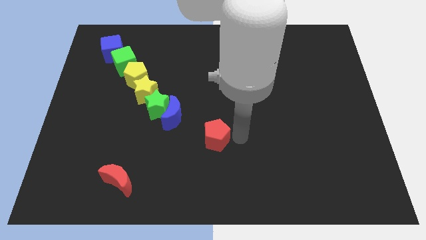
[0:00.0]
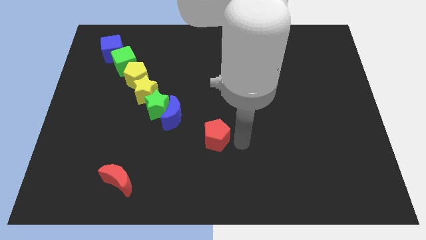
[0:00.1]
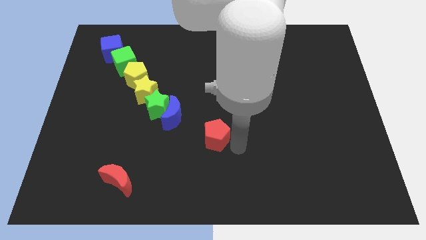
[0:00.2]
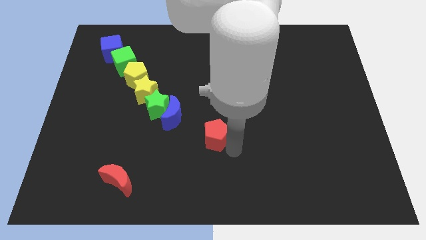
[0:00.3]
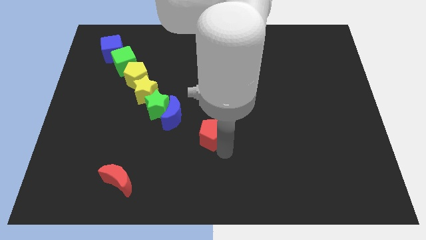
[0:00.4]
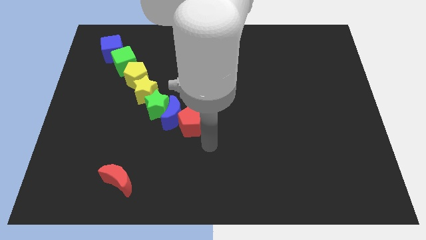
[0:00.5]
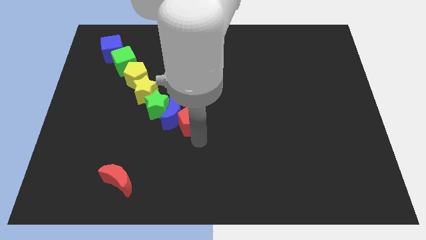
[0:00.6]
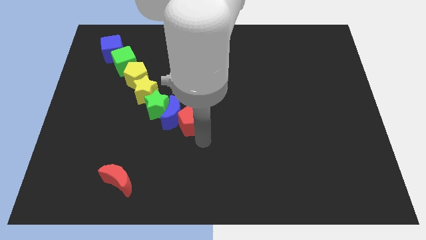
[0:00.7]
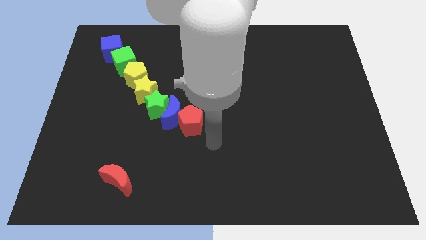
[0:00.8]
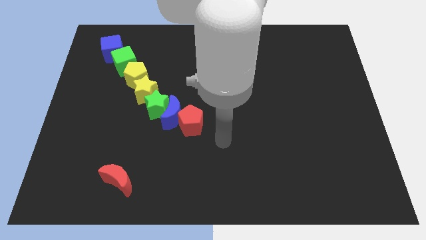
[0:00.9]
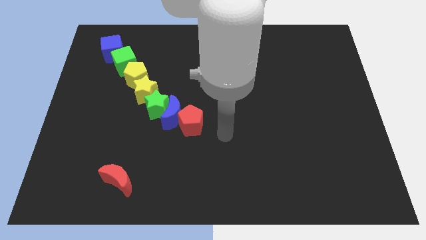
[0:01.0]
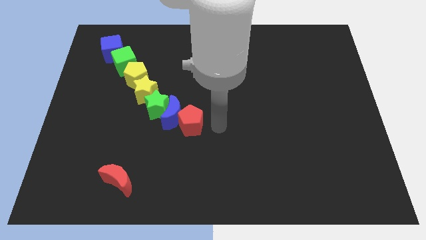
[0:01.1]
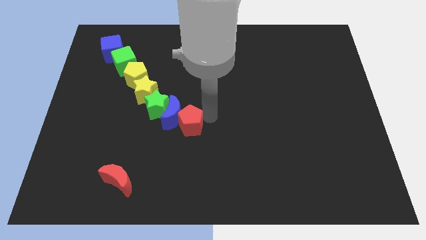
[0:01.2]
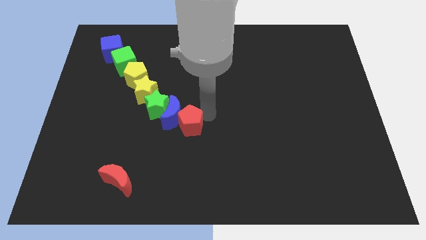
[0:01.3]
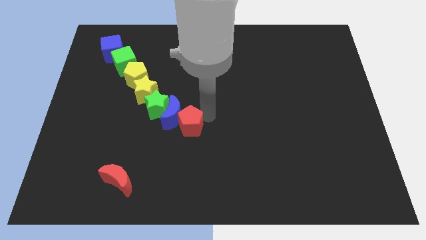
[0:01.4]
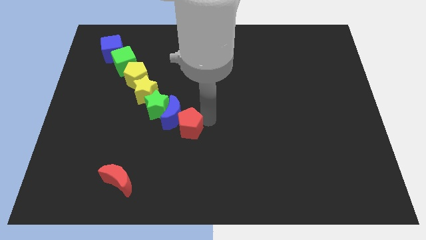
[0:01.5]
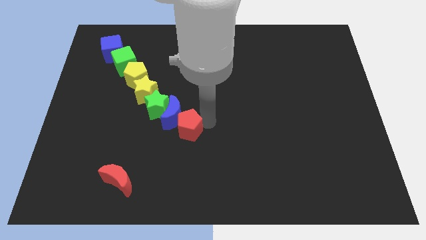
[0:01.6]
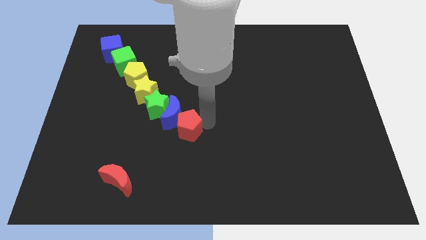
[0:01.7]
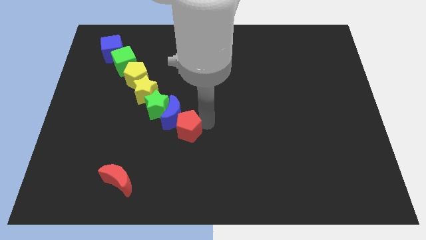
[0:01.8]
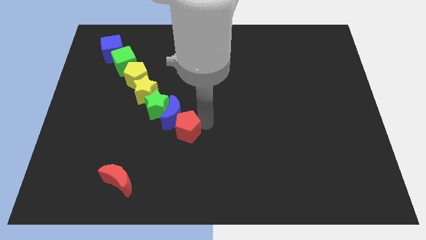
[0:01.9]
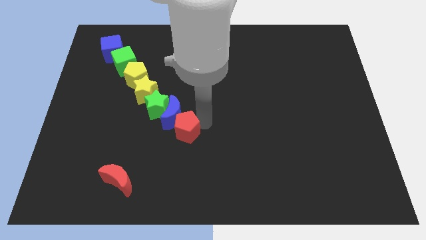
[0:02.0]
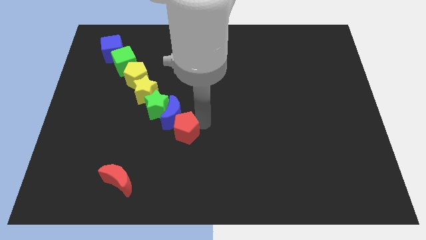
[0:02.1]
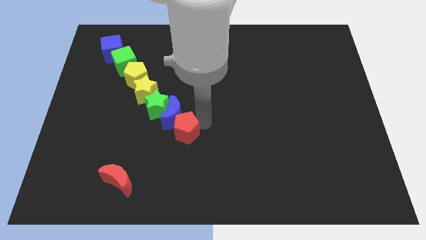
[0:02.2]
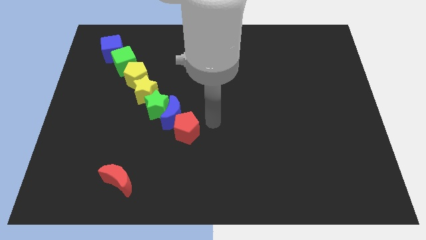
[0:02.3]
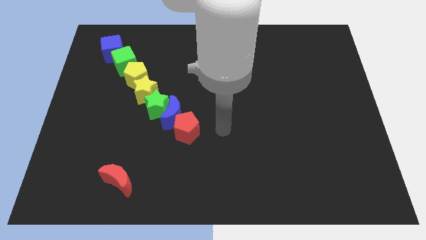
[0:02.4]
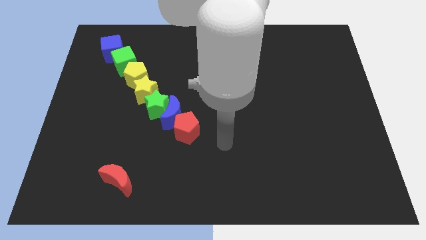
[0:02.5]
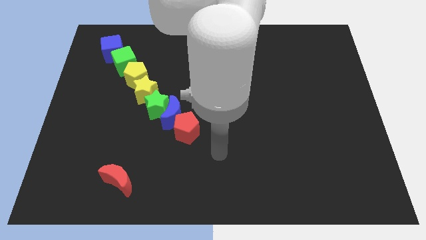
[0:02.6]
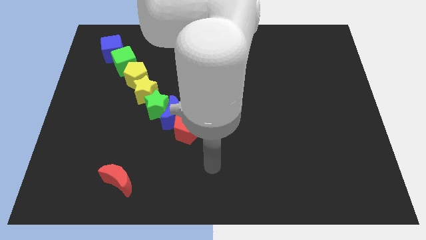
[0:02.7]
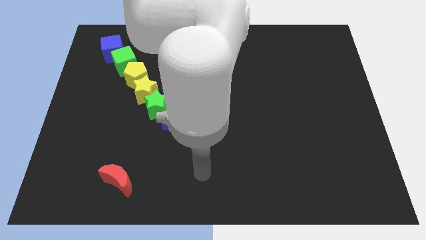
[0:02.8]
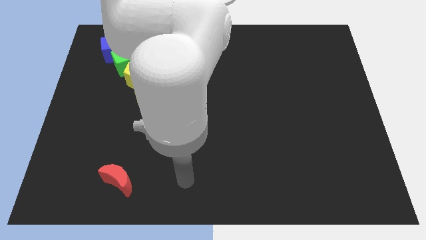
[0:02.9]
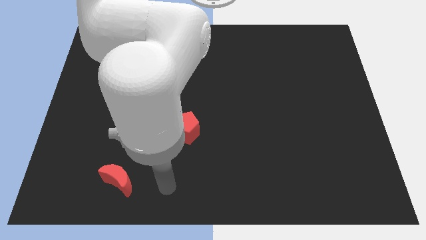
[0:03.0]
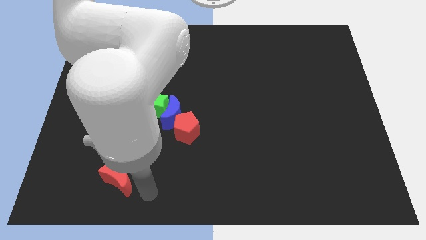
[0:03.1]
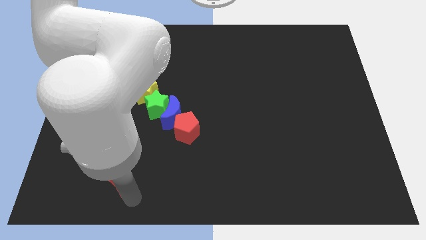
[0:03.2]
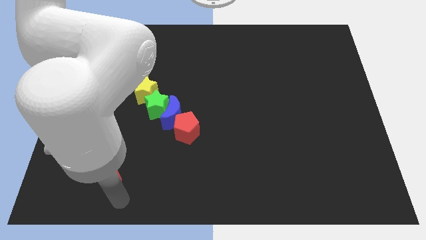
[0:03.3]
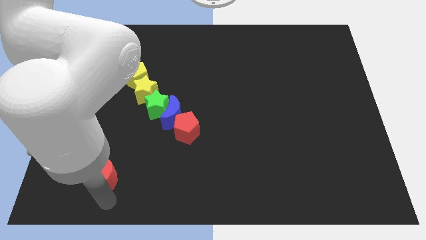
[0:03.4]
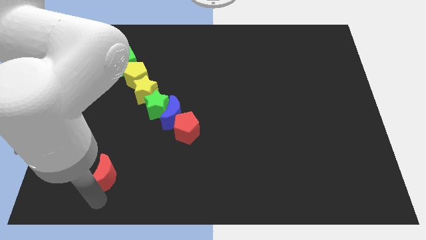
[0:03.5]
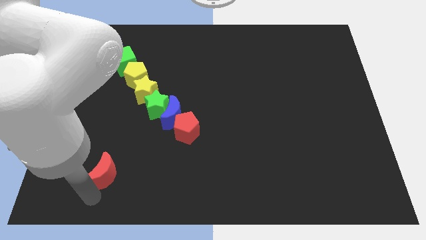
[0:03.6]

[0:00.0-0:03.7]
place red pentagon below to the blue crescent

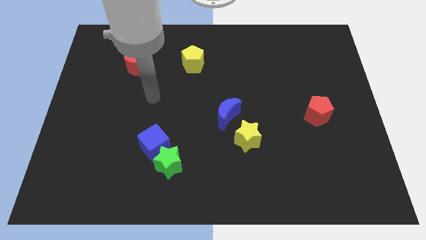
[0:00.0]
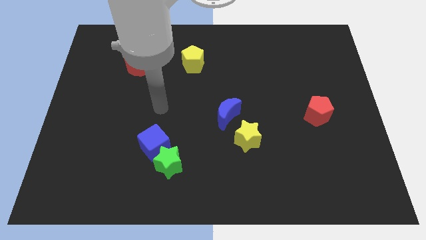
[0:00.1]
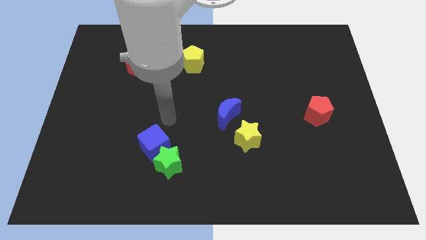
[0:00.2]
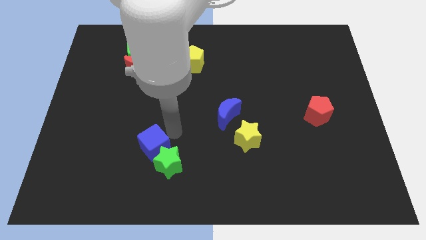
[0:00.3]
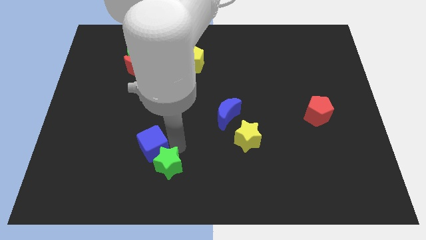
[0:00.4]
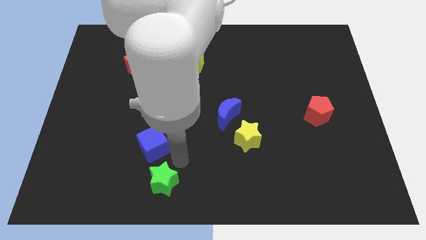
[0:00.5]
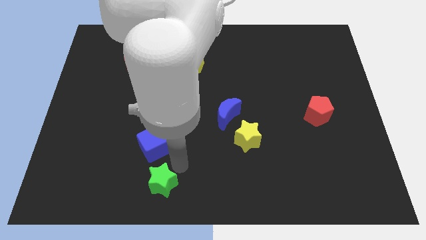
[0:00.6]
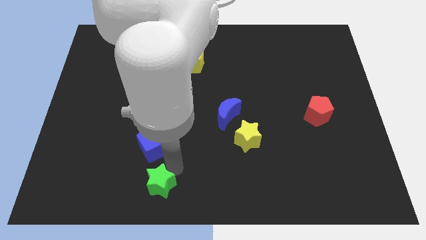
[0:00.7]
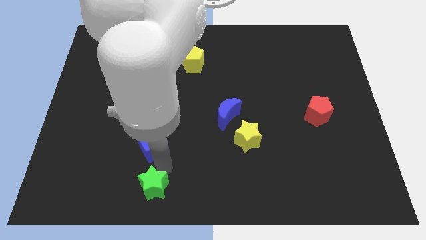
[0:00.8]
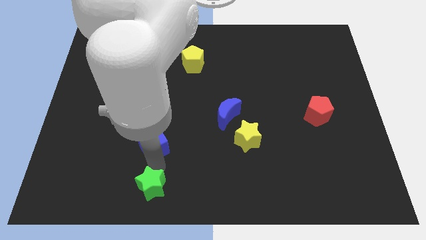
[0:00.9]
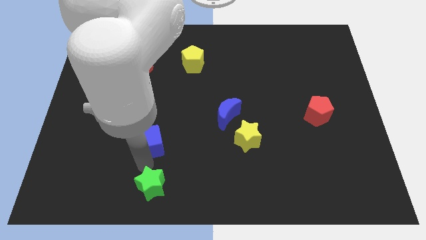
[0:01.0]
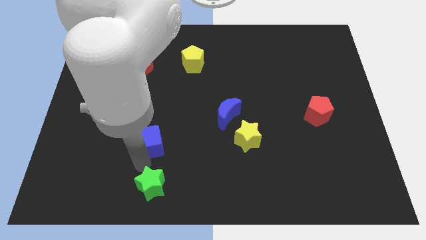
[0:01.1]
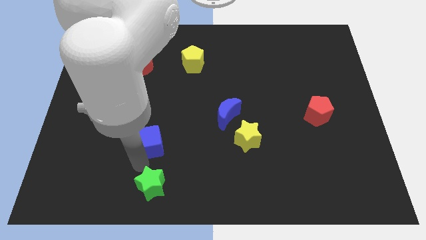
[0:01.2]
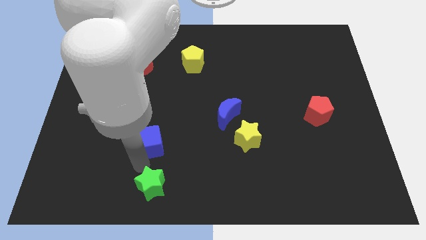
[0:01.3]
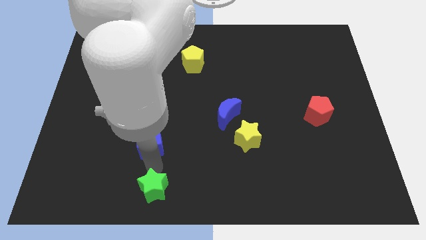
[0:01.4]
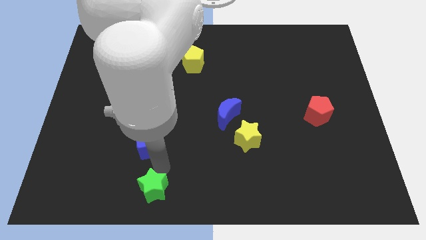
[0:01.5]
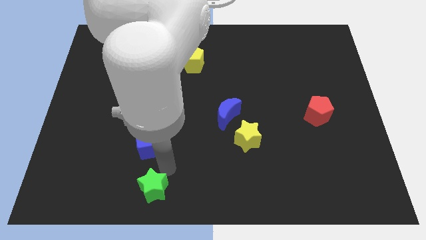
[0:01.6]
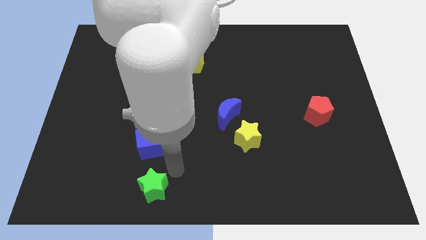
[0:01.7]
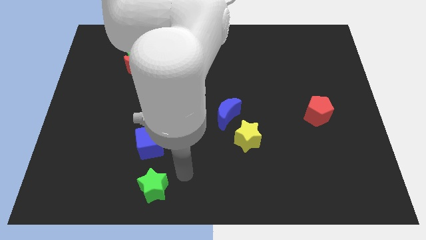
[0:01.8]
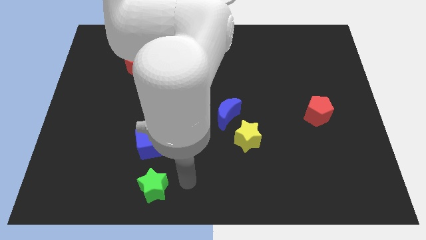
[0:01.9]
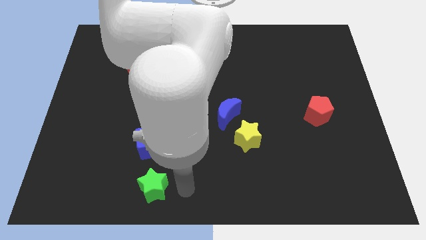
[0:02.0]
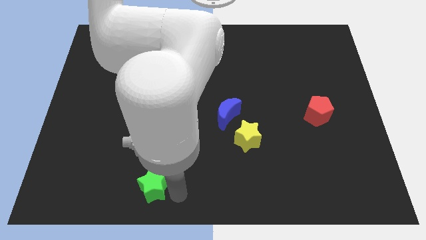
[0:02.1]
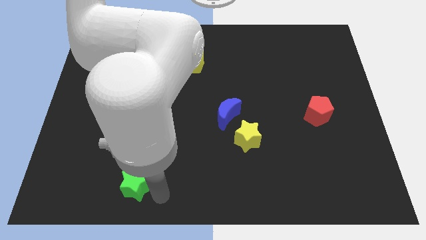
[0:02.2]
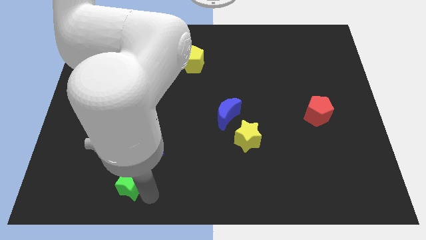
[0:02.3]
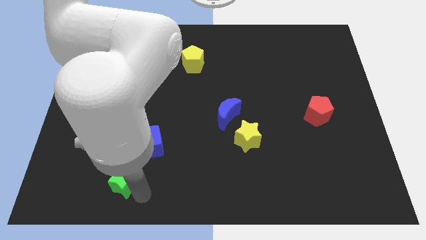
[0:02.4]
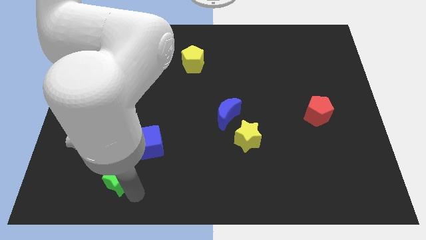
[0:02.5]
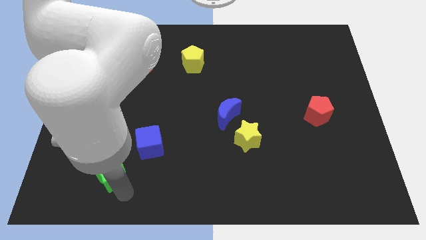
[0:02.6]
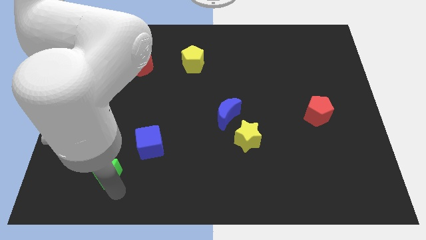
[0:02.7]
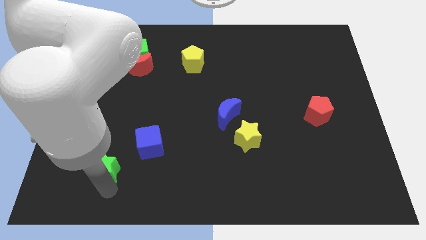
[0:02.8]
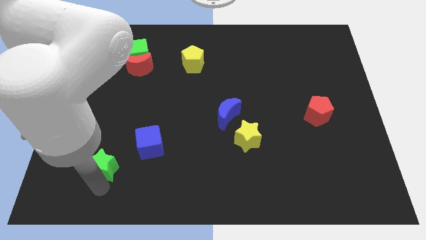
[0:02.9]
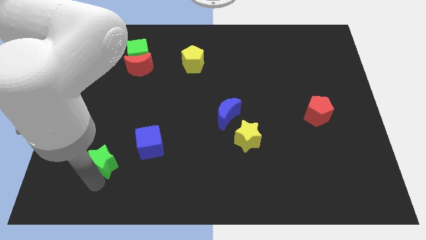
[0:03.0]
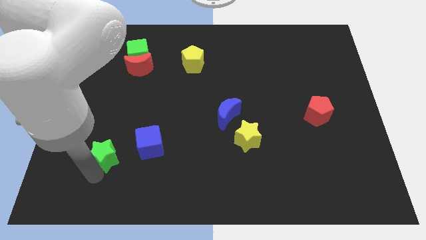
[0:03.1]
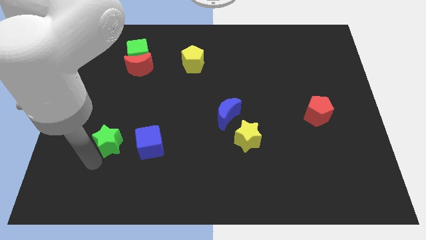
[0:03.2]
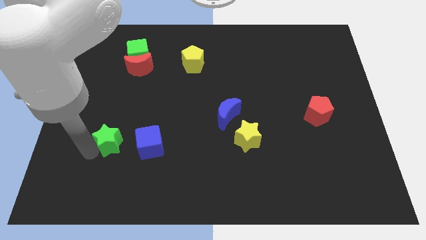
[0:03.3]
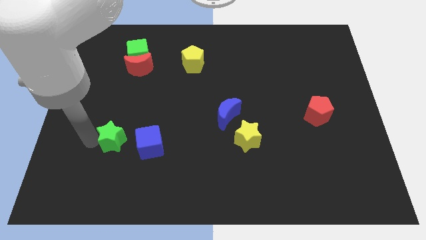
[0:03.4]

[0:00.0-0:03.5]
place the green star to the left side of the blue cube

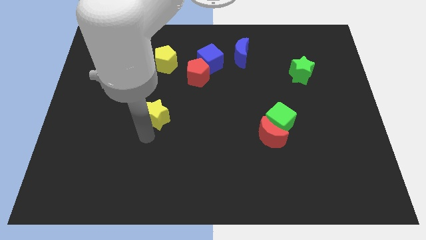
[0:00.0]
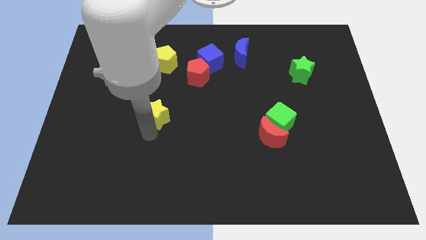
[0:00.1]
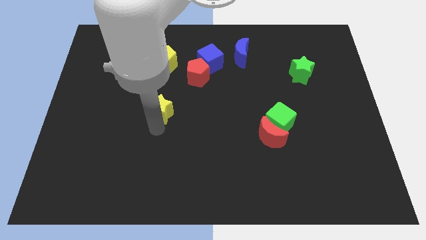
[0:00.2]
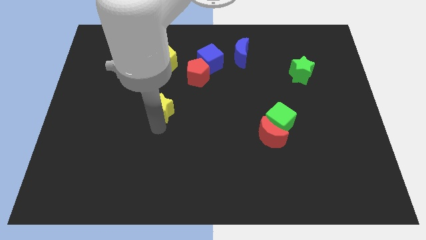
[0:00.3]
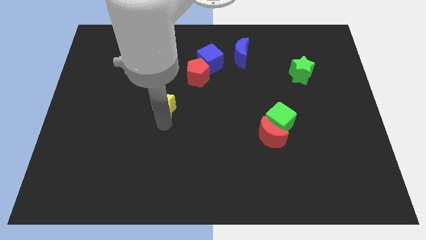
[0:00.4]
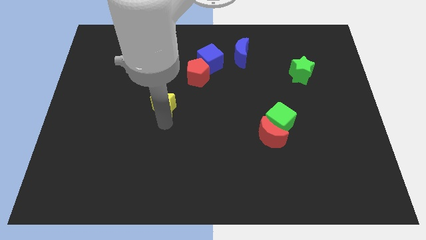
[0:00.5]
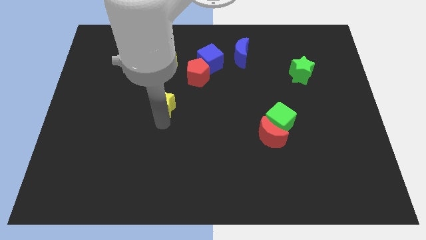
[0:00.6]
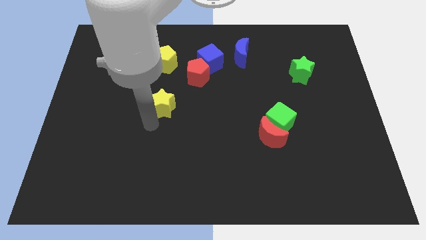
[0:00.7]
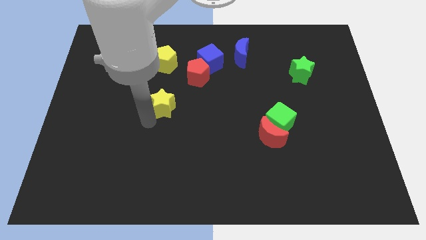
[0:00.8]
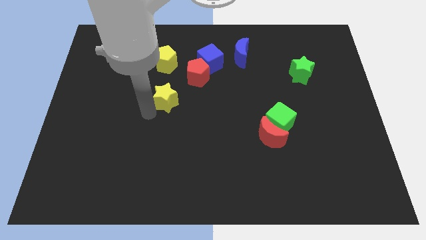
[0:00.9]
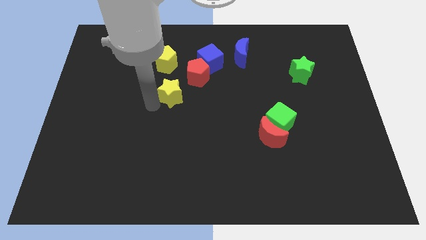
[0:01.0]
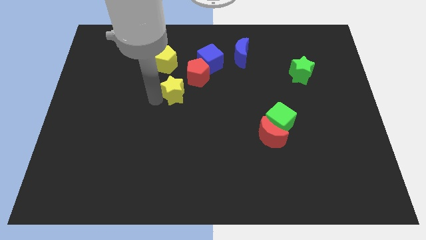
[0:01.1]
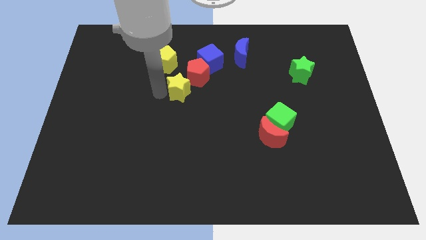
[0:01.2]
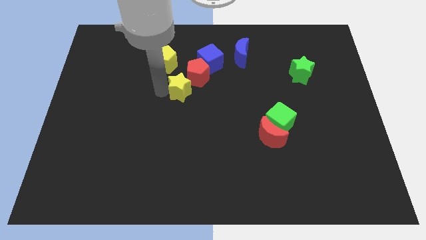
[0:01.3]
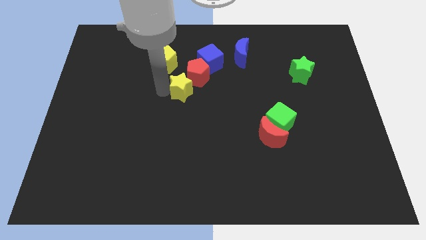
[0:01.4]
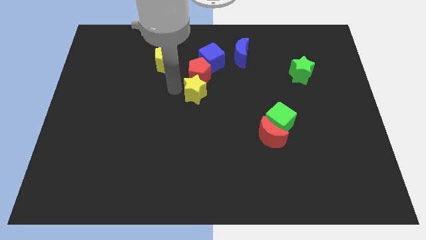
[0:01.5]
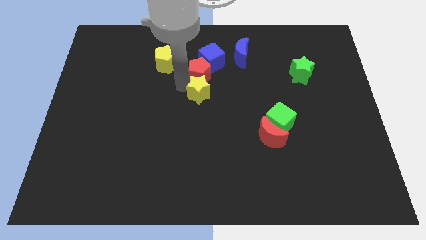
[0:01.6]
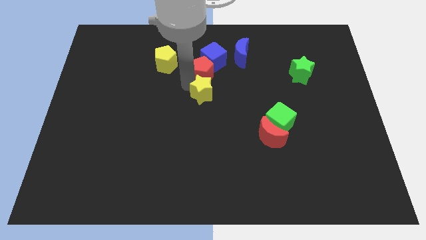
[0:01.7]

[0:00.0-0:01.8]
place the yellow star at the bottom of the red pentagon
